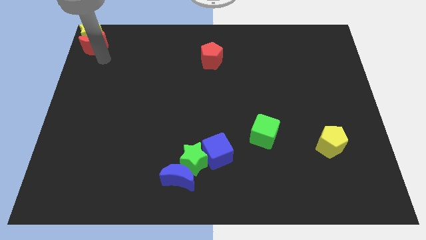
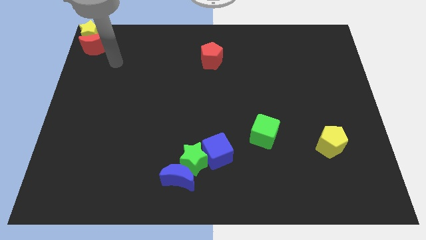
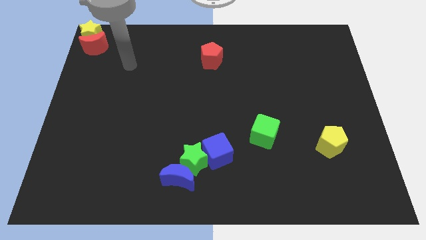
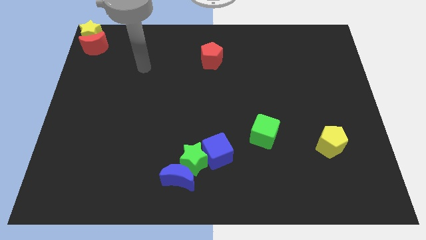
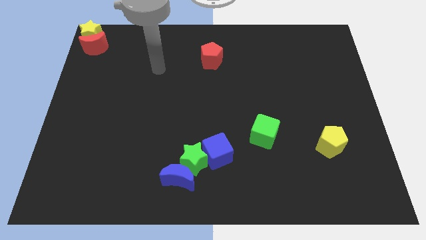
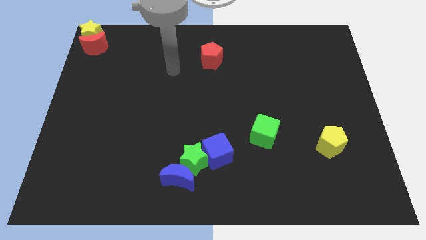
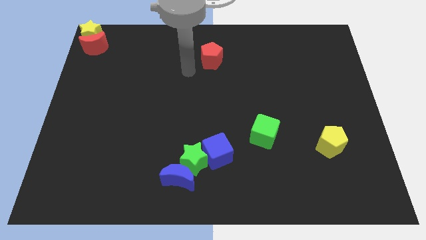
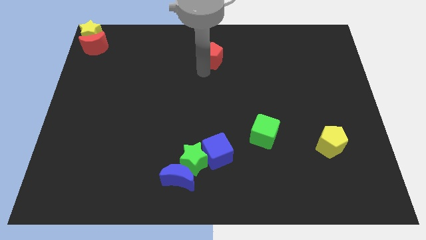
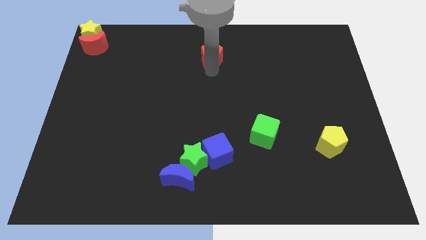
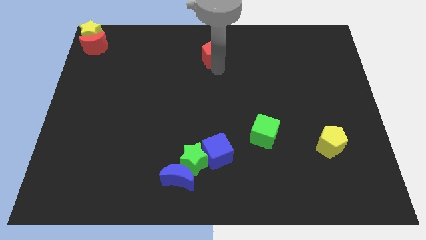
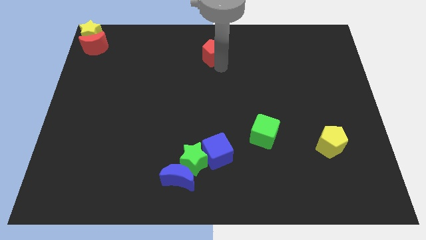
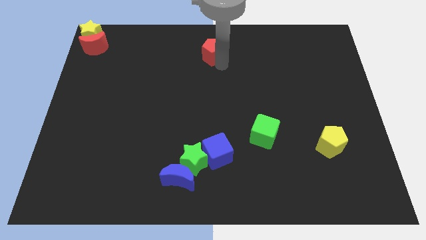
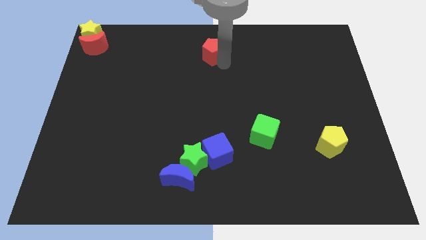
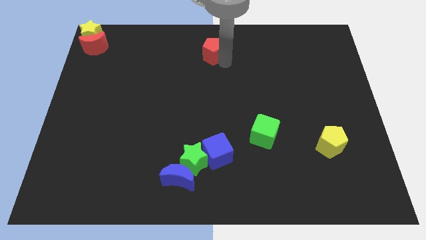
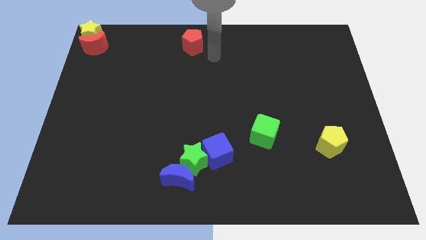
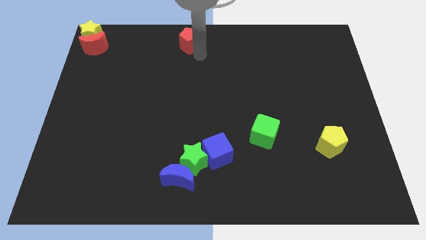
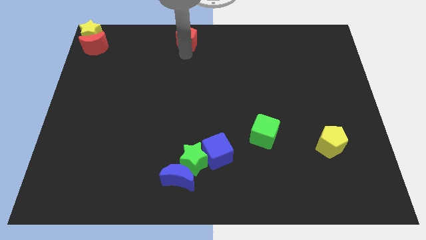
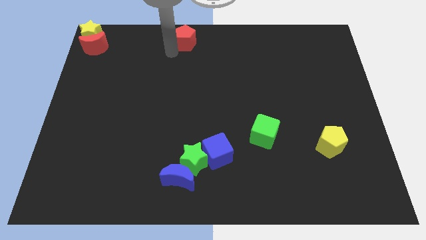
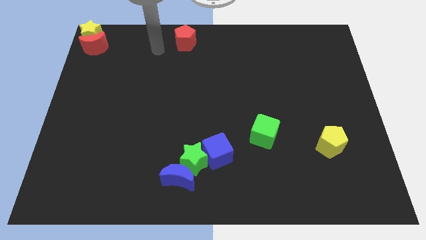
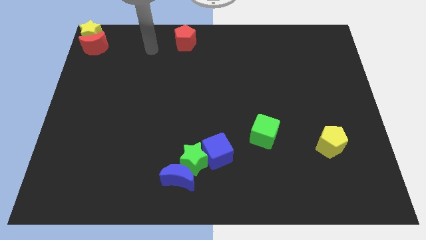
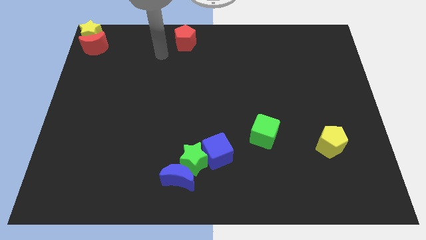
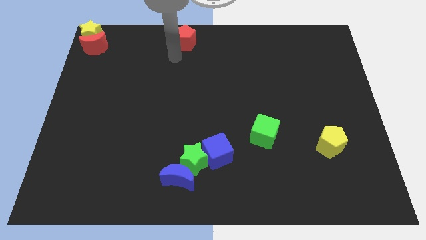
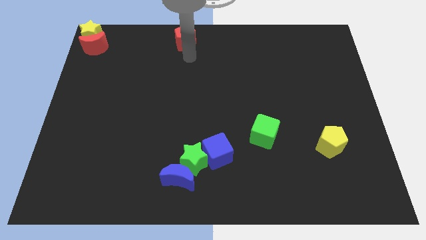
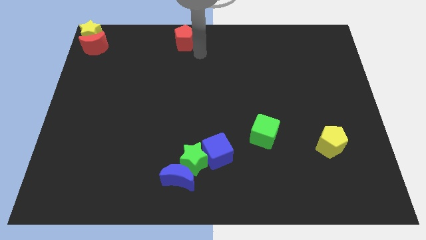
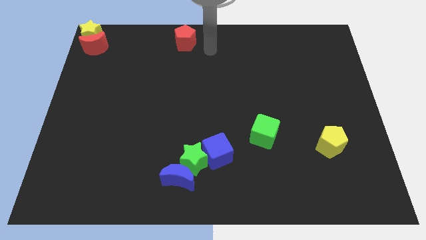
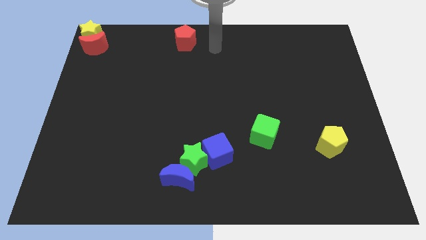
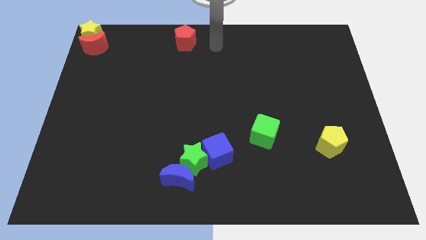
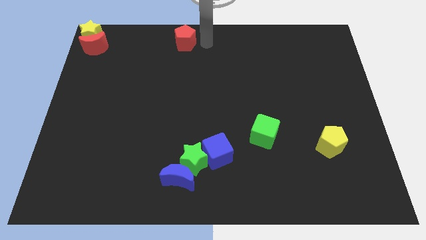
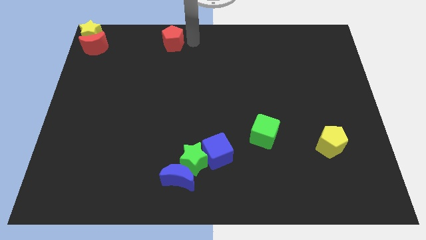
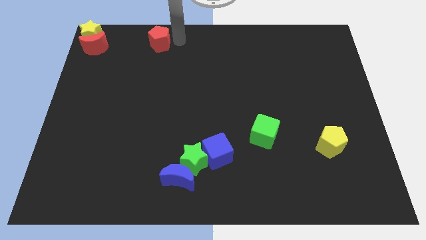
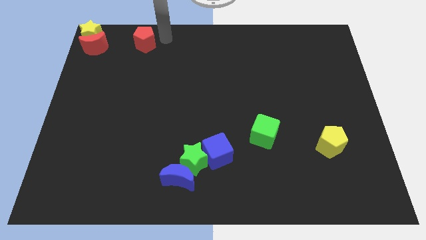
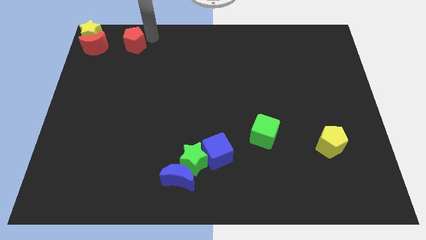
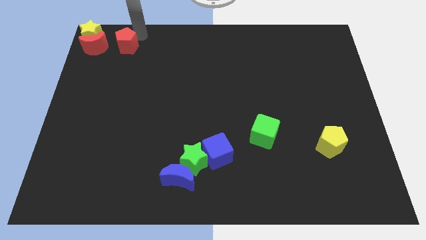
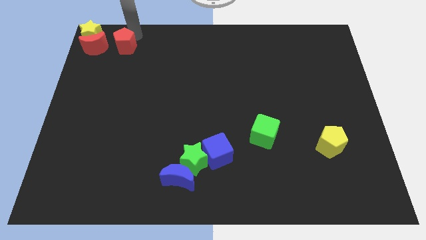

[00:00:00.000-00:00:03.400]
place the red pentagon right to the red moon

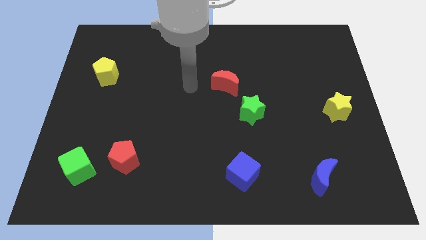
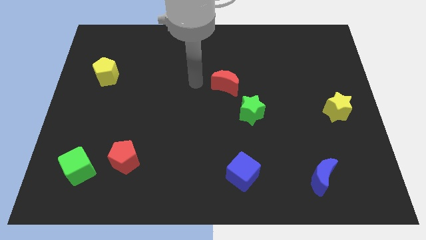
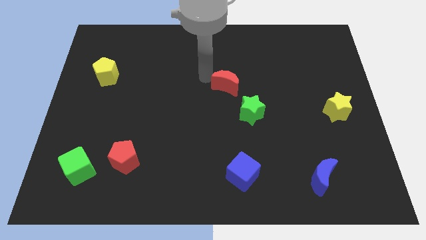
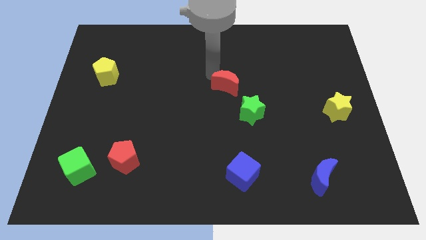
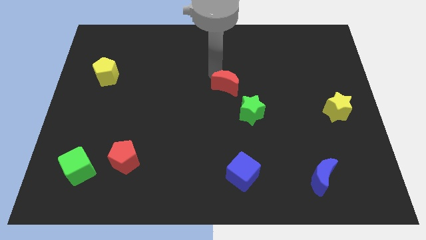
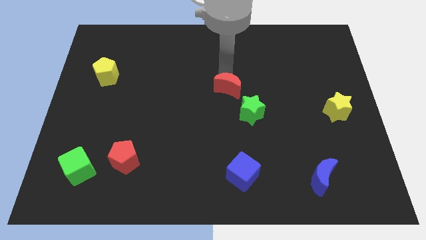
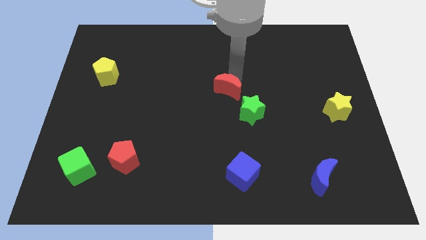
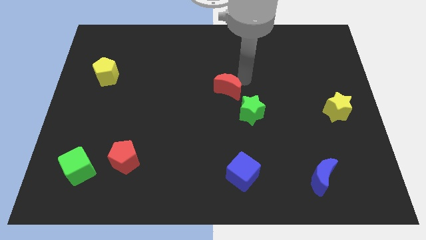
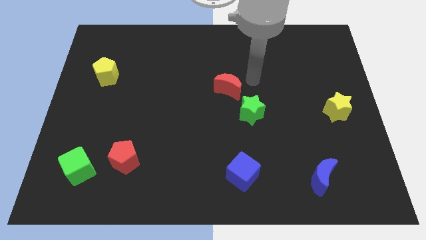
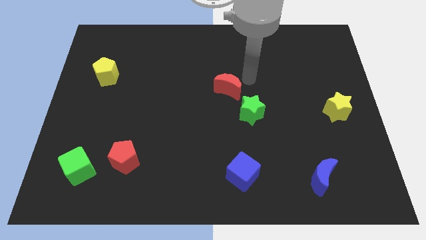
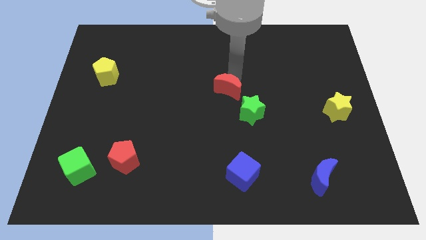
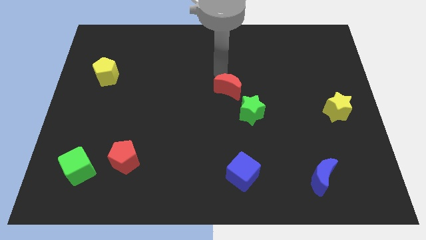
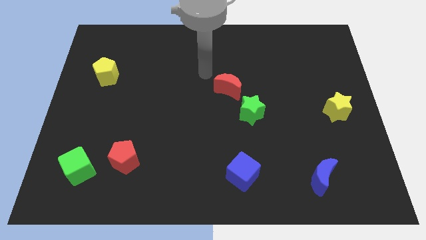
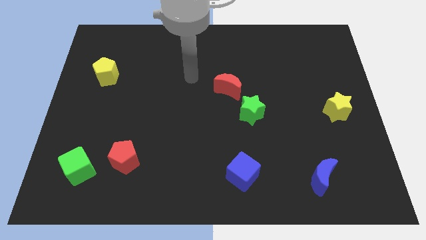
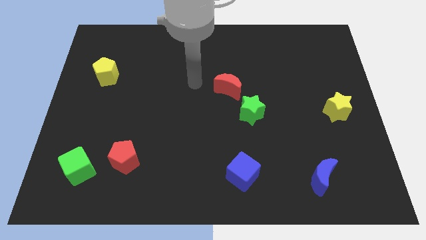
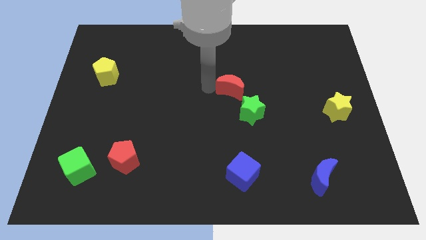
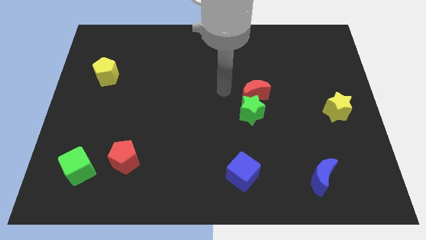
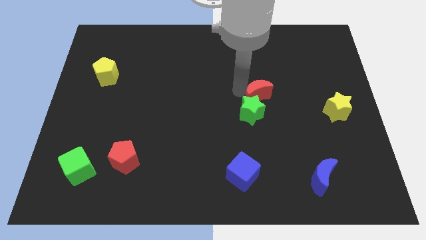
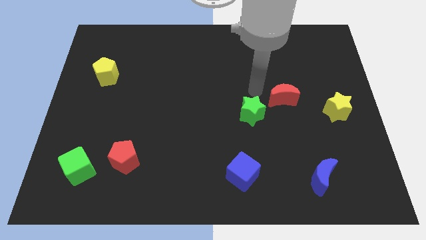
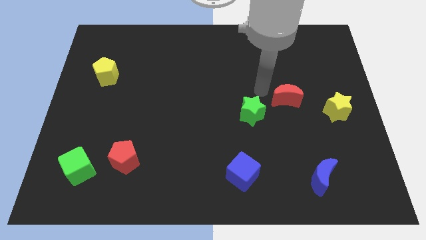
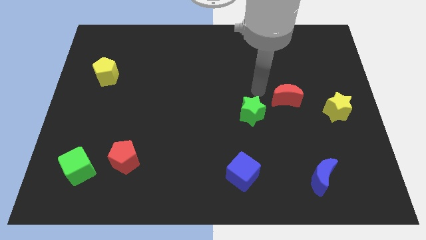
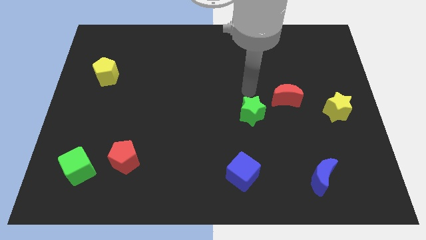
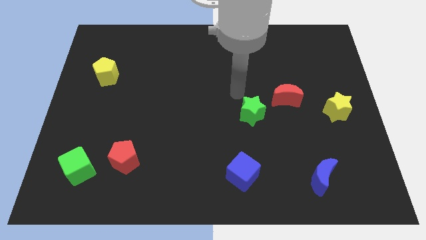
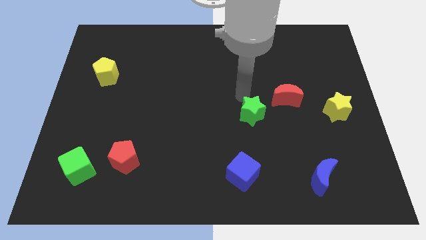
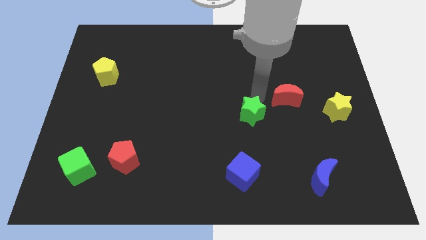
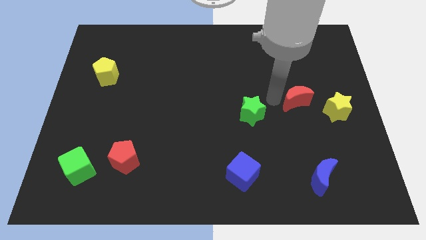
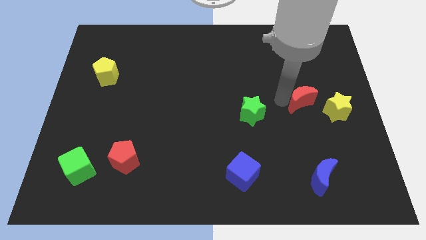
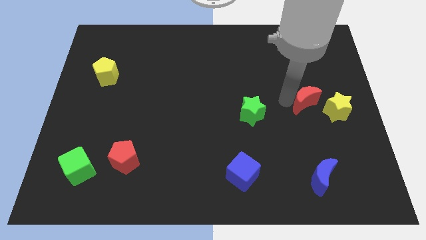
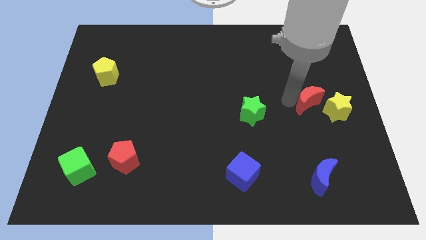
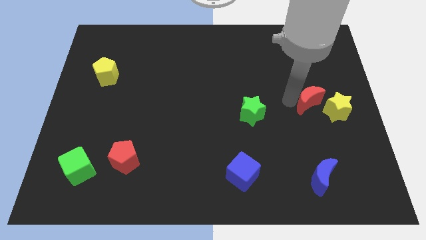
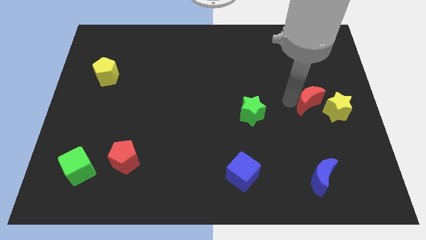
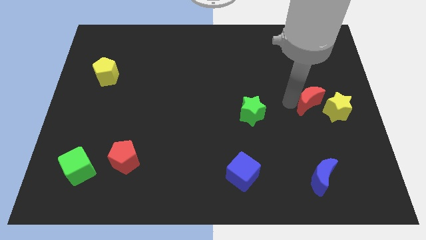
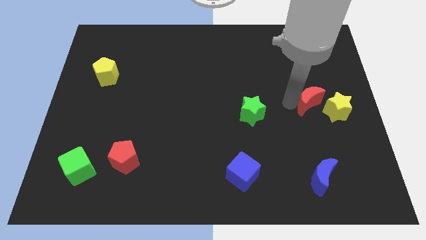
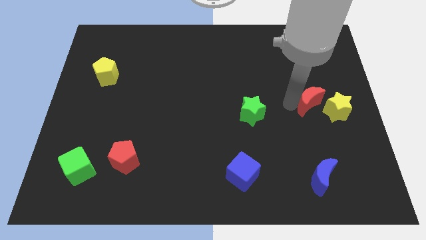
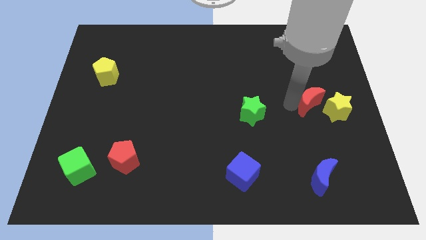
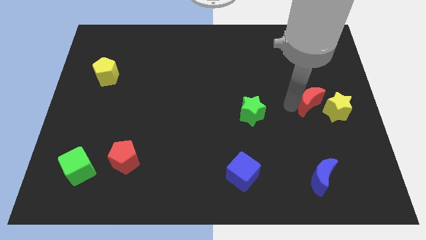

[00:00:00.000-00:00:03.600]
drag the red moon close to the left side of the yellow star

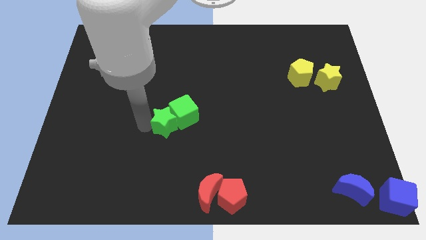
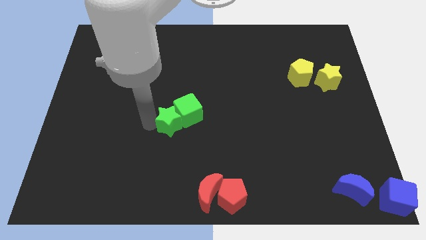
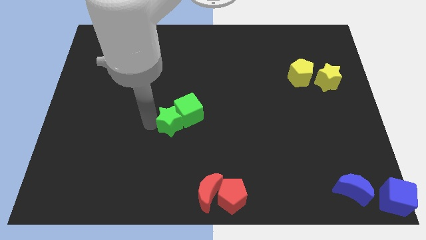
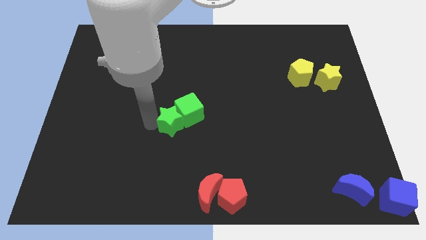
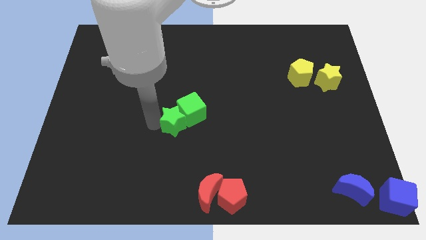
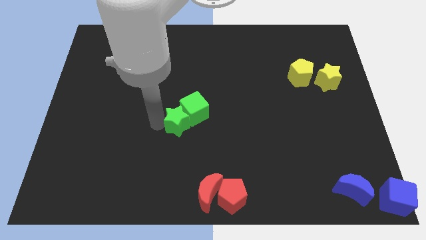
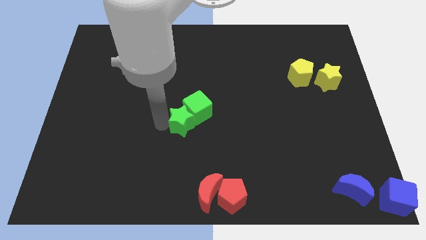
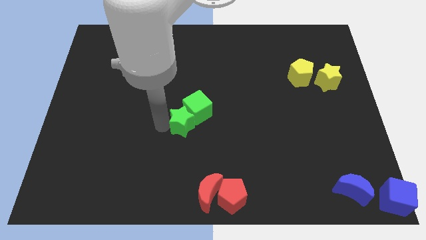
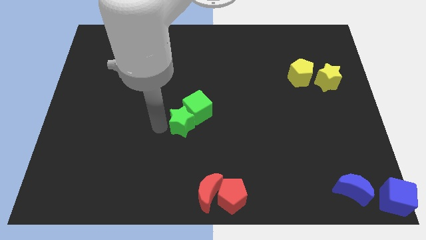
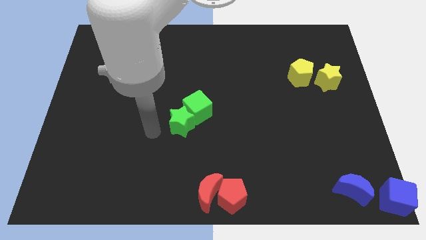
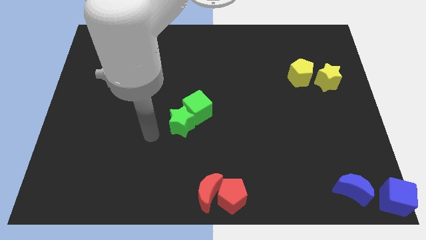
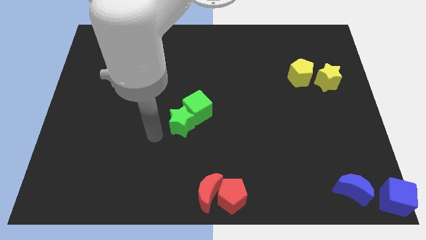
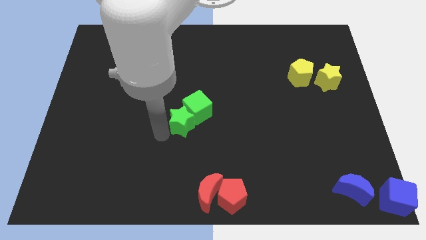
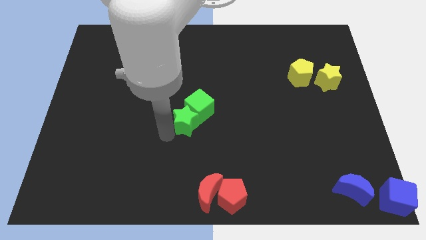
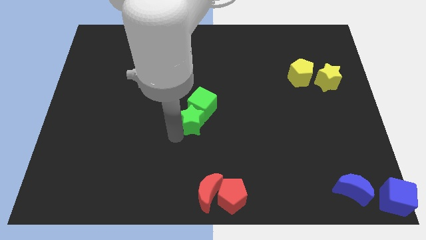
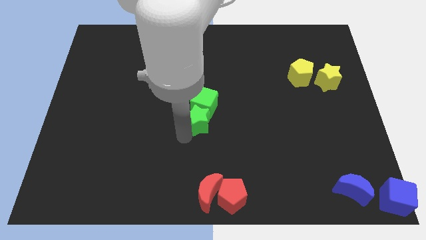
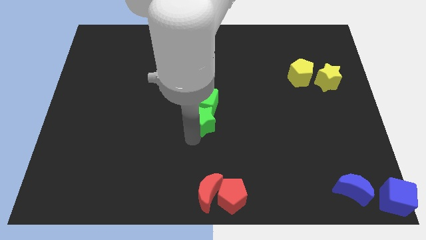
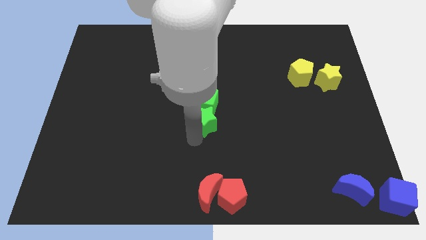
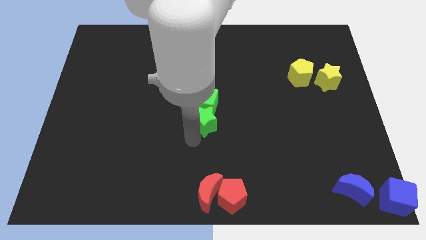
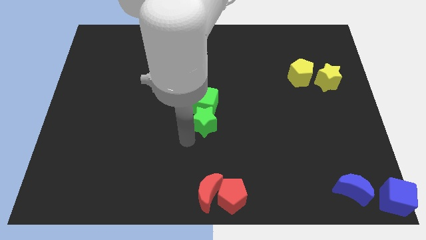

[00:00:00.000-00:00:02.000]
place the green blocks above the red blocks
